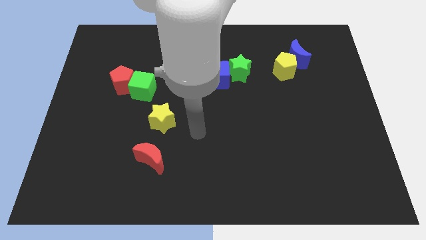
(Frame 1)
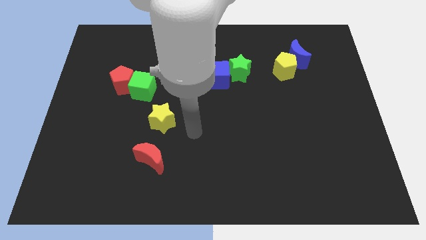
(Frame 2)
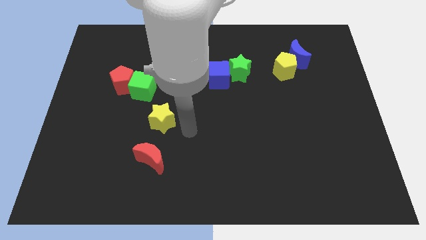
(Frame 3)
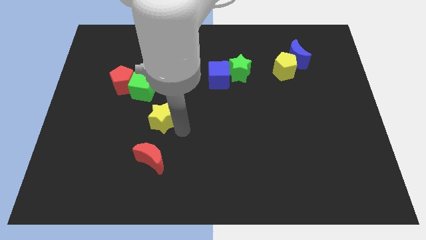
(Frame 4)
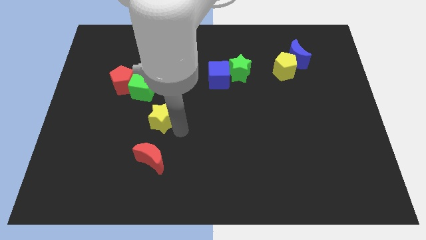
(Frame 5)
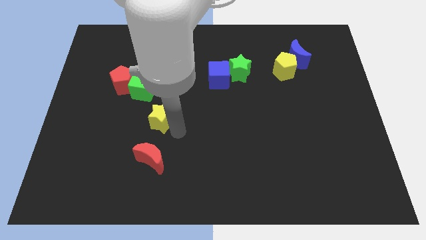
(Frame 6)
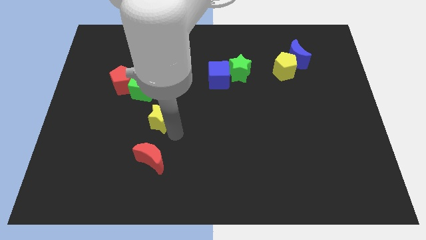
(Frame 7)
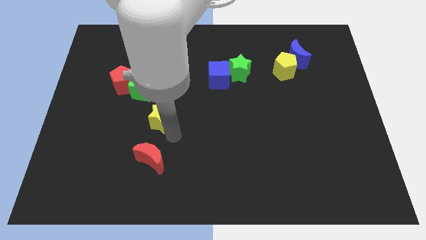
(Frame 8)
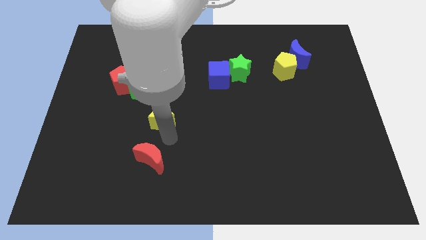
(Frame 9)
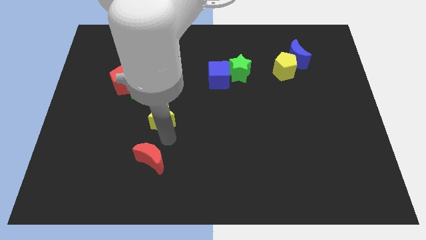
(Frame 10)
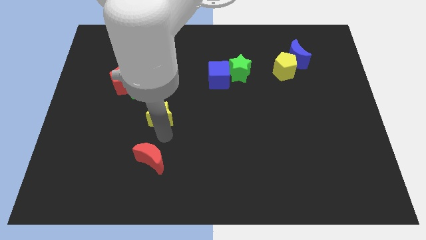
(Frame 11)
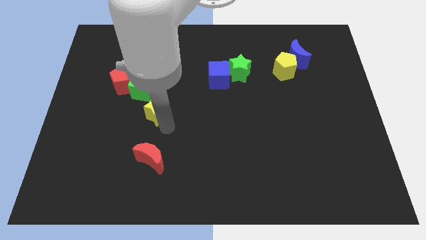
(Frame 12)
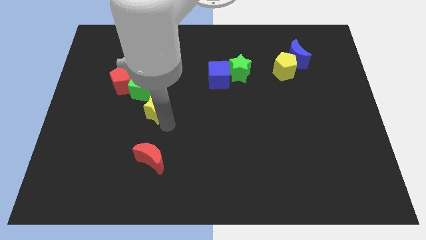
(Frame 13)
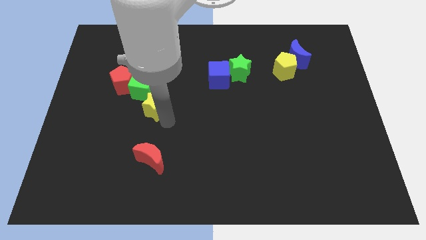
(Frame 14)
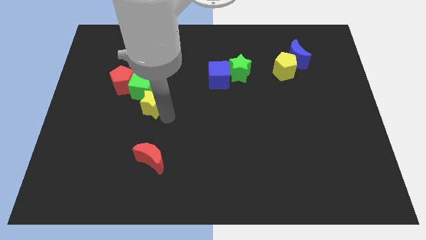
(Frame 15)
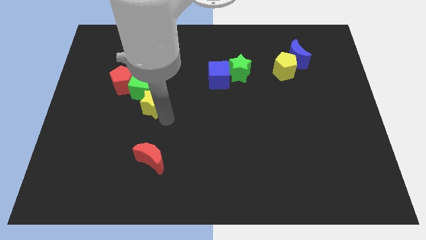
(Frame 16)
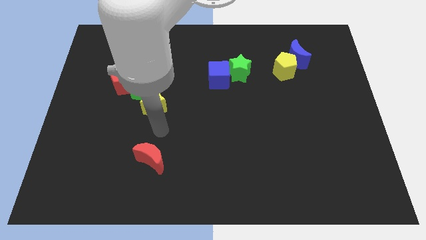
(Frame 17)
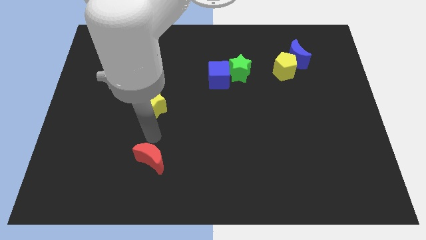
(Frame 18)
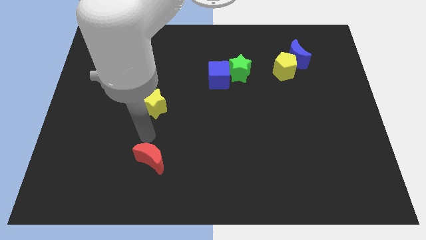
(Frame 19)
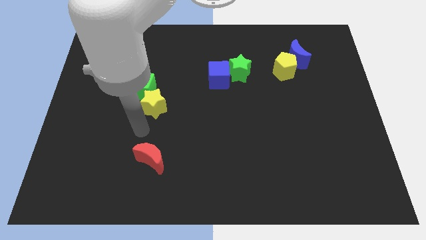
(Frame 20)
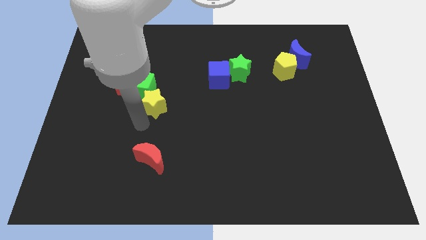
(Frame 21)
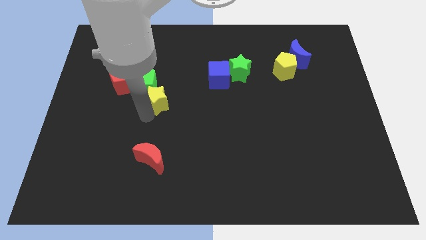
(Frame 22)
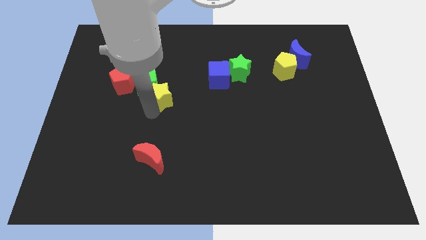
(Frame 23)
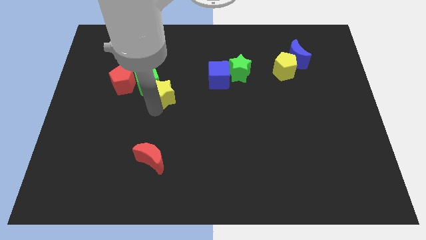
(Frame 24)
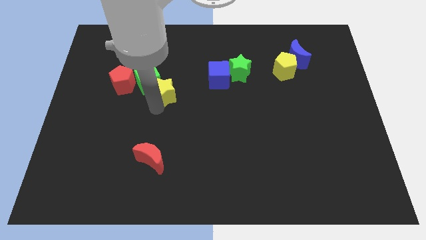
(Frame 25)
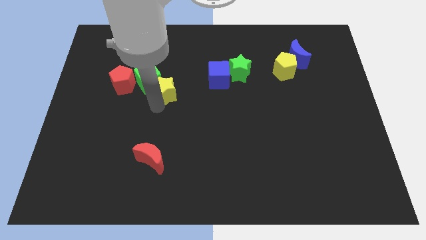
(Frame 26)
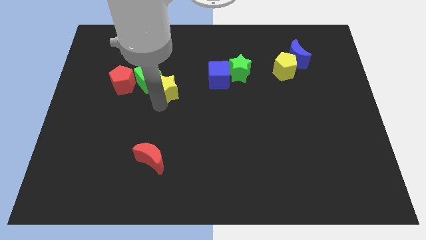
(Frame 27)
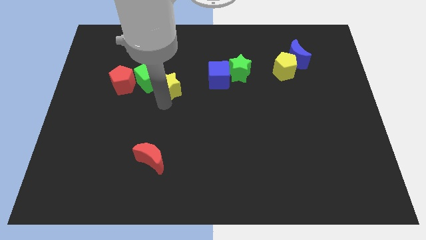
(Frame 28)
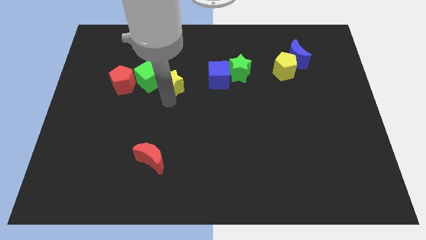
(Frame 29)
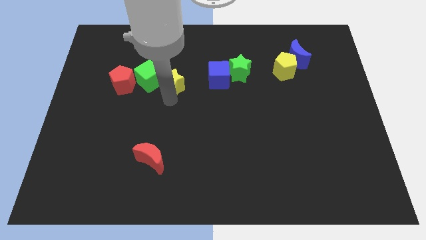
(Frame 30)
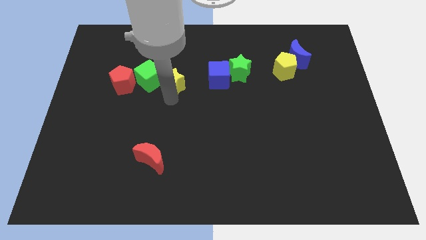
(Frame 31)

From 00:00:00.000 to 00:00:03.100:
place the yellow star parallel right to the green cube

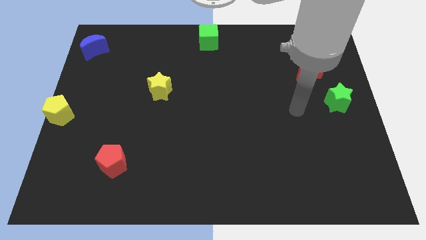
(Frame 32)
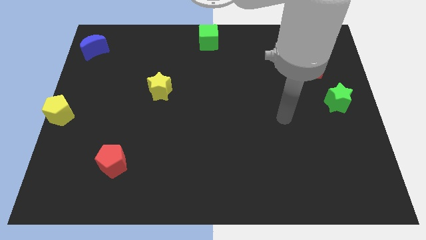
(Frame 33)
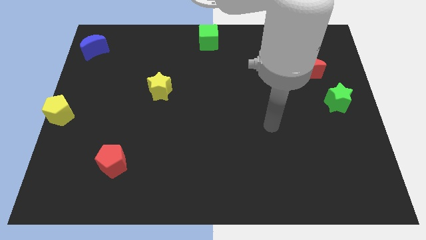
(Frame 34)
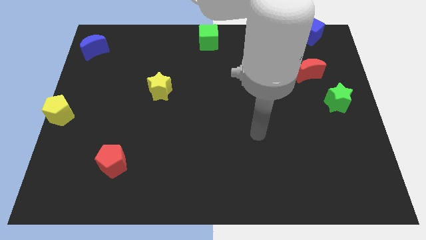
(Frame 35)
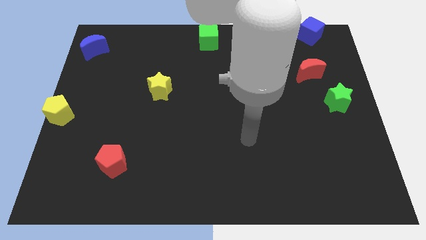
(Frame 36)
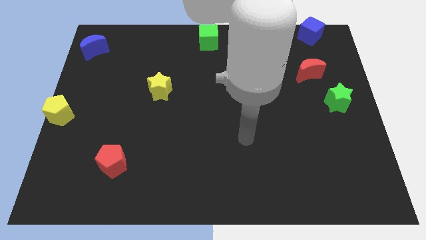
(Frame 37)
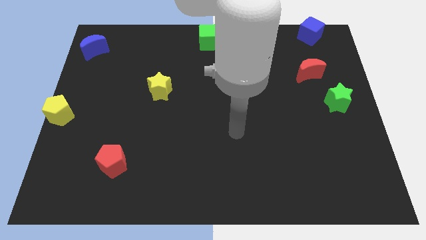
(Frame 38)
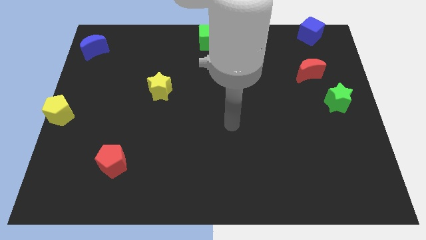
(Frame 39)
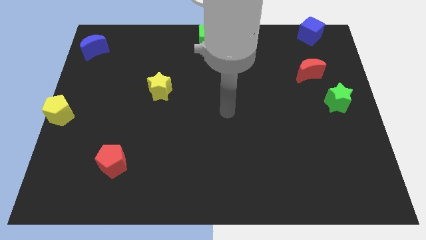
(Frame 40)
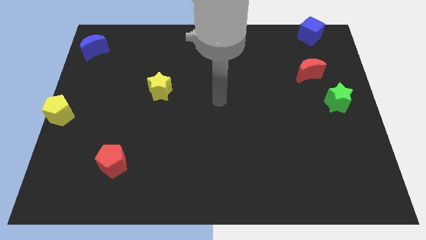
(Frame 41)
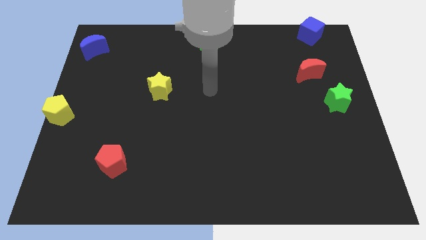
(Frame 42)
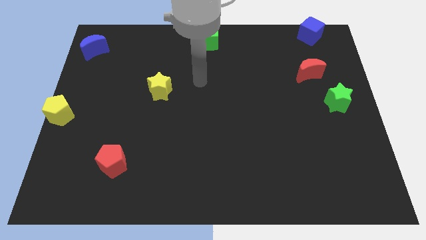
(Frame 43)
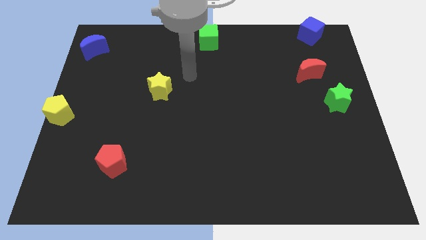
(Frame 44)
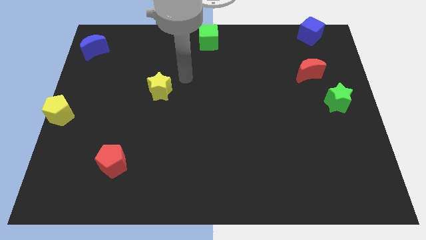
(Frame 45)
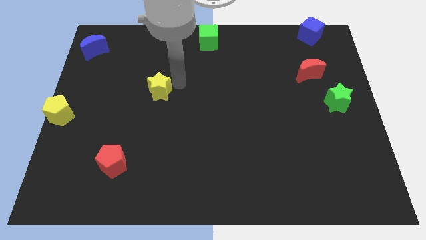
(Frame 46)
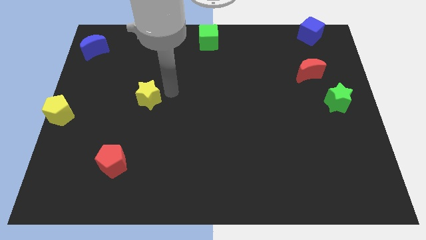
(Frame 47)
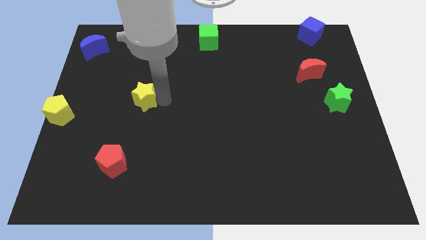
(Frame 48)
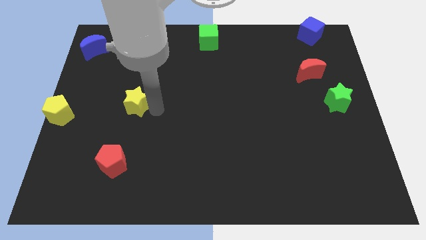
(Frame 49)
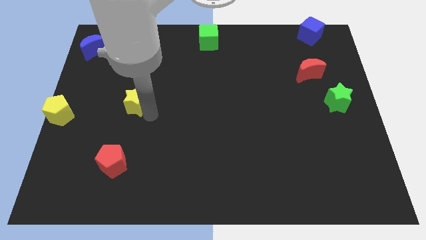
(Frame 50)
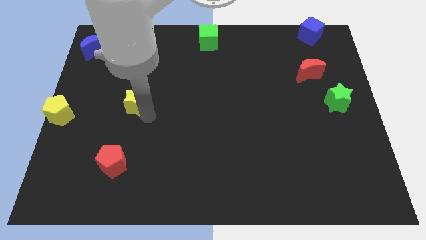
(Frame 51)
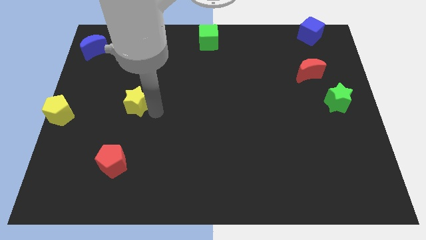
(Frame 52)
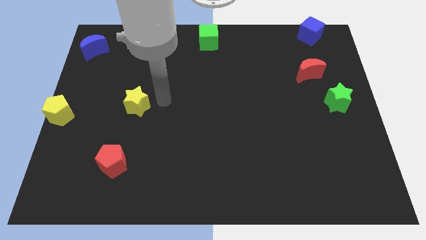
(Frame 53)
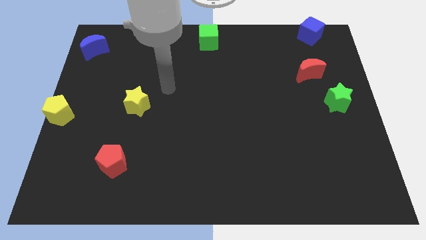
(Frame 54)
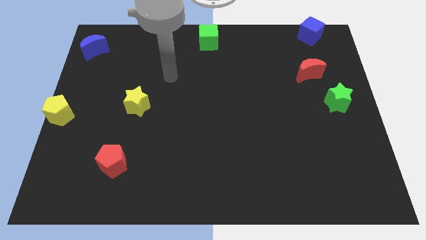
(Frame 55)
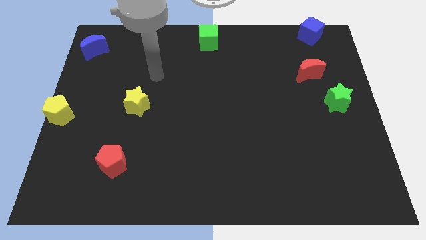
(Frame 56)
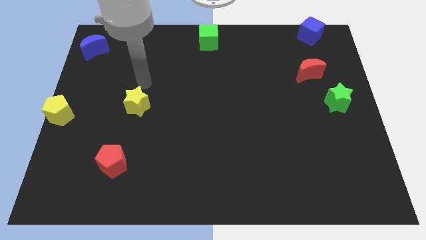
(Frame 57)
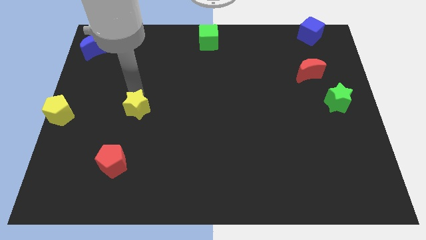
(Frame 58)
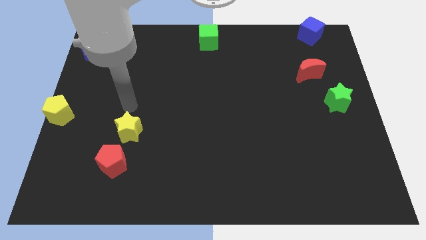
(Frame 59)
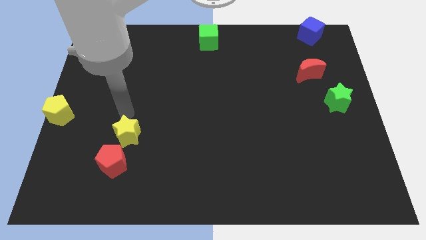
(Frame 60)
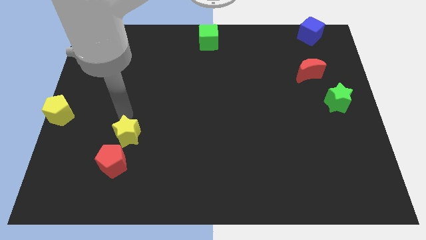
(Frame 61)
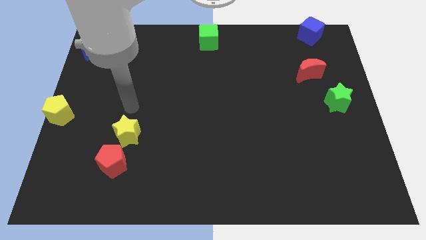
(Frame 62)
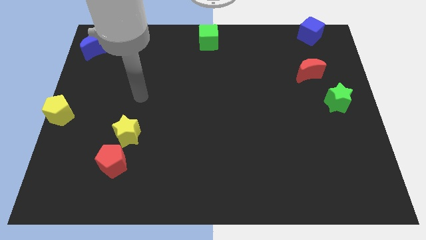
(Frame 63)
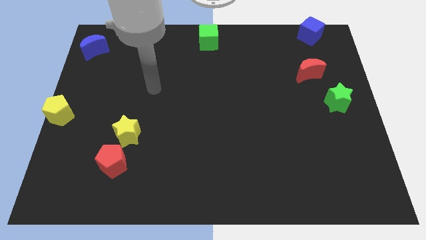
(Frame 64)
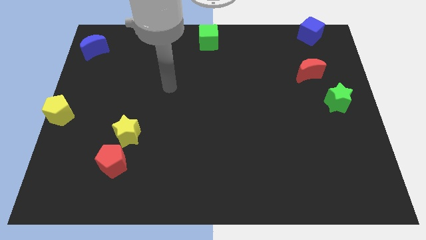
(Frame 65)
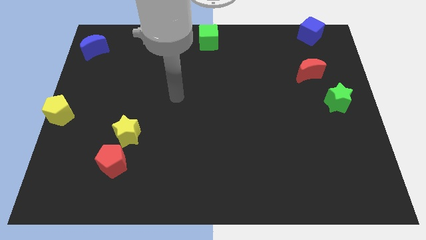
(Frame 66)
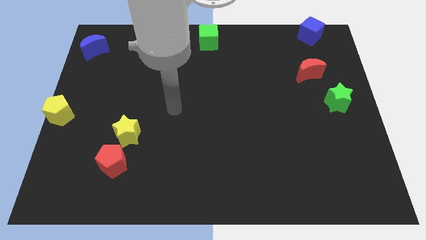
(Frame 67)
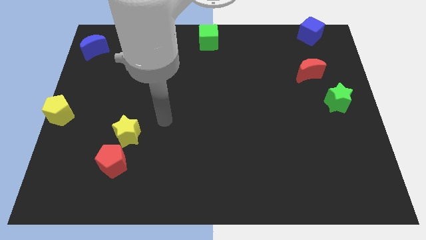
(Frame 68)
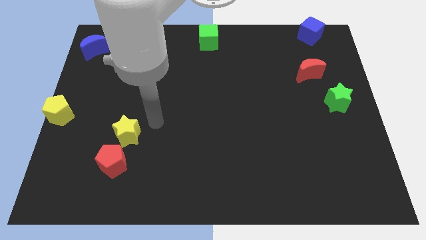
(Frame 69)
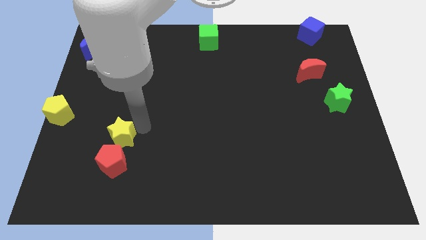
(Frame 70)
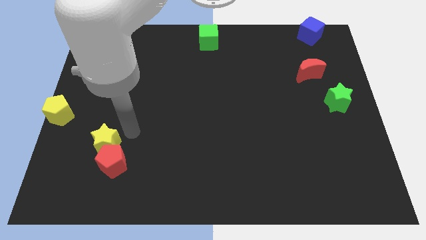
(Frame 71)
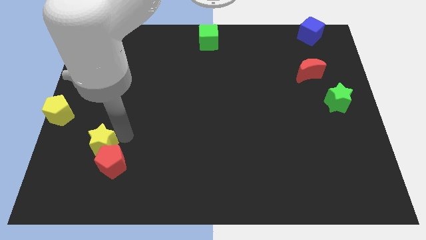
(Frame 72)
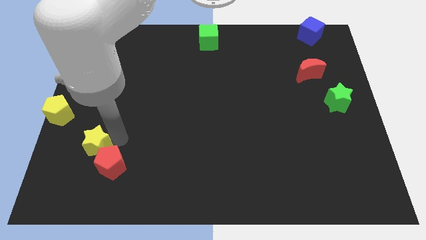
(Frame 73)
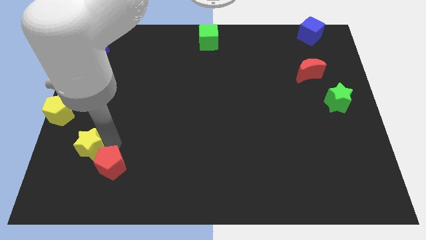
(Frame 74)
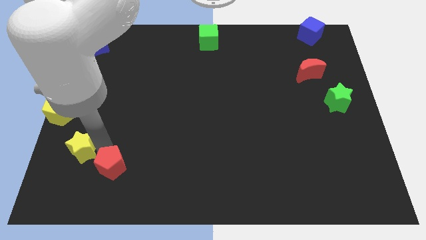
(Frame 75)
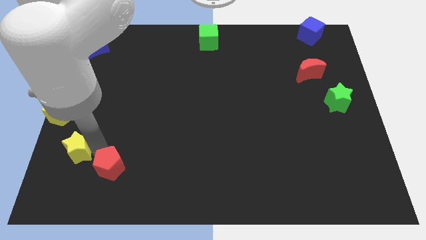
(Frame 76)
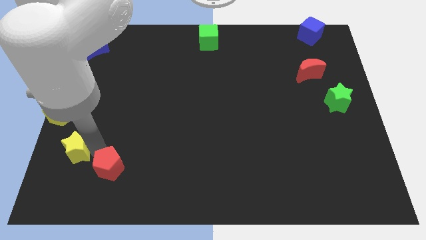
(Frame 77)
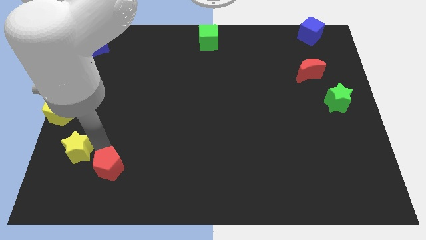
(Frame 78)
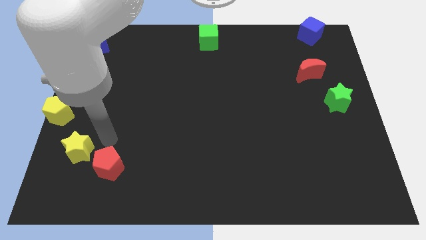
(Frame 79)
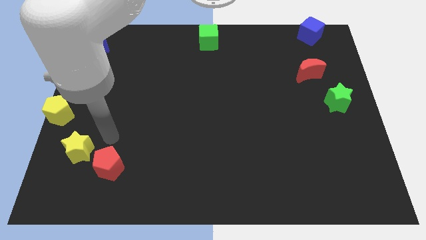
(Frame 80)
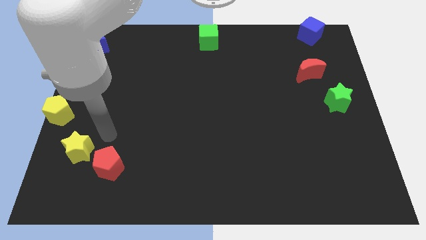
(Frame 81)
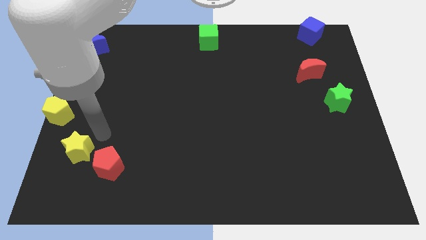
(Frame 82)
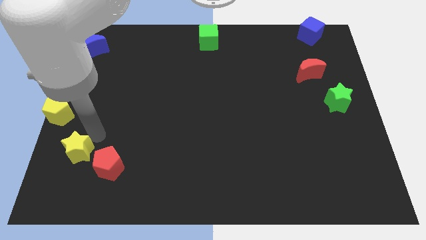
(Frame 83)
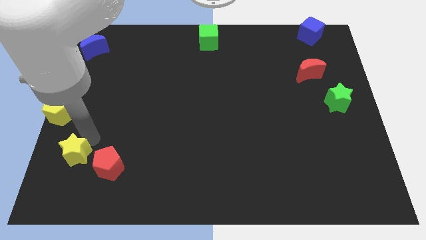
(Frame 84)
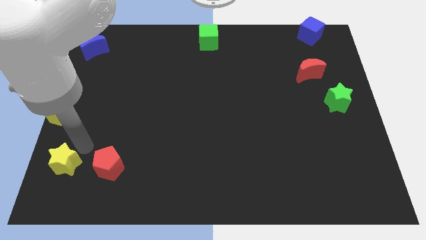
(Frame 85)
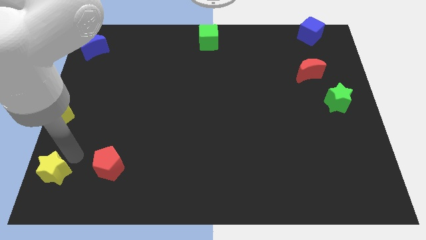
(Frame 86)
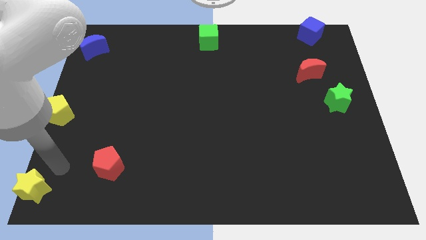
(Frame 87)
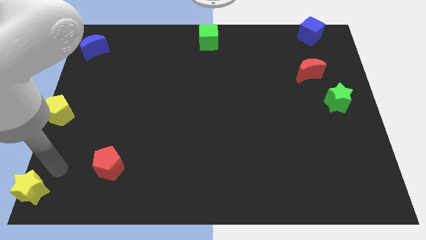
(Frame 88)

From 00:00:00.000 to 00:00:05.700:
place the yellow star to the bottom left corner

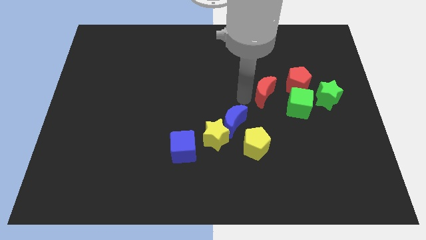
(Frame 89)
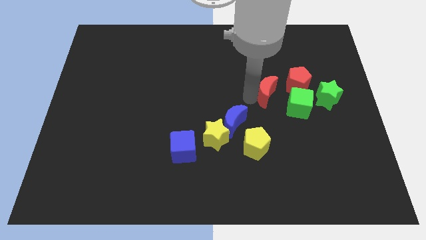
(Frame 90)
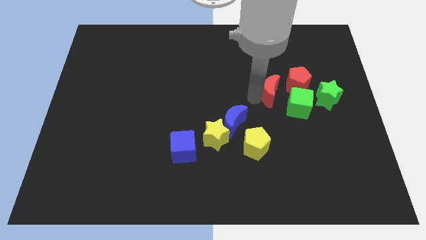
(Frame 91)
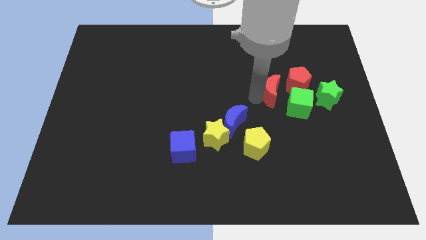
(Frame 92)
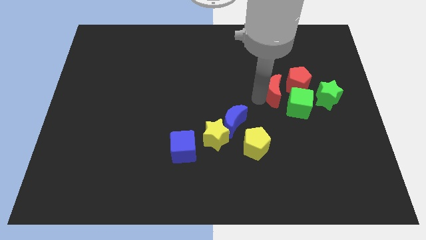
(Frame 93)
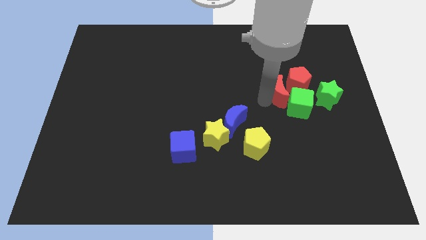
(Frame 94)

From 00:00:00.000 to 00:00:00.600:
move the red crescent close to the green cube
